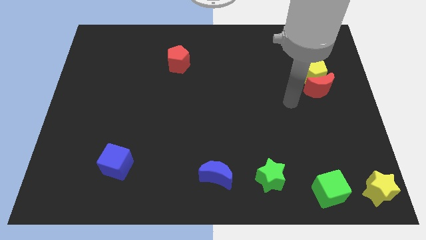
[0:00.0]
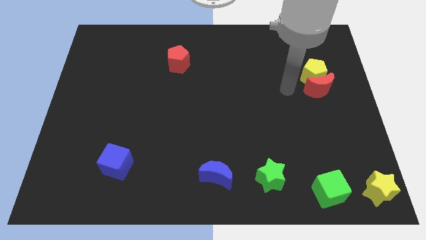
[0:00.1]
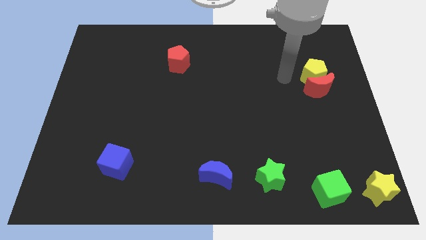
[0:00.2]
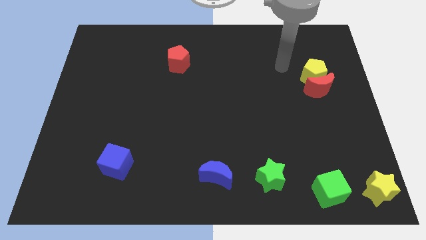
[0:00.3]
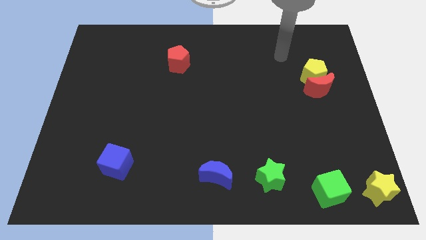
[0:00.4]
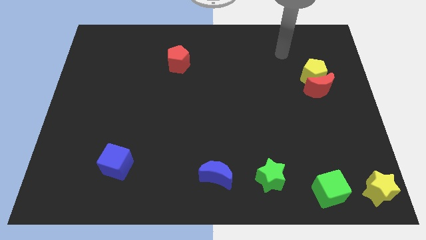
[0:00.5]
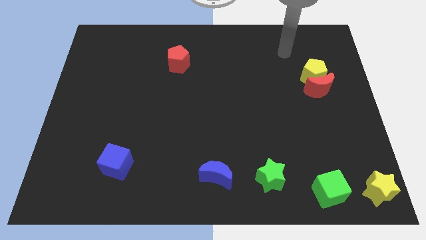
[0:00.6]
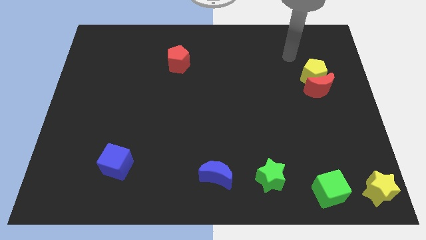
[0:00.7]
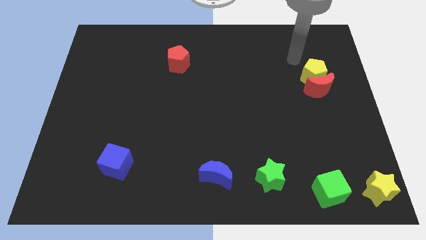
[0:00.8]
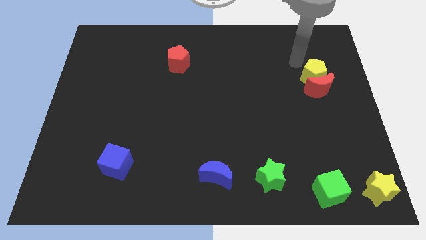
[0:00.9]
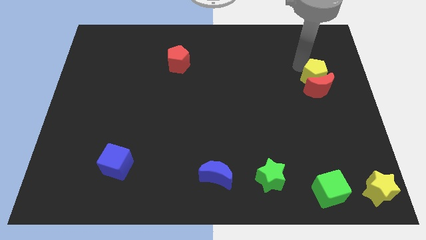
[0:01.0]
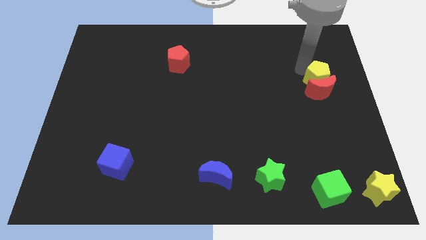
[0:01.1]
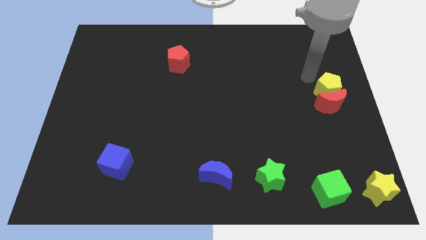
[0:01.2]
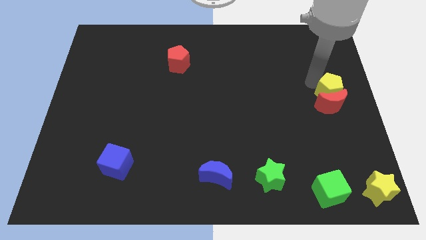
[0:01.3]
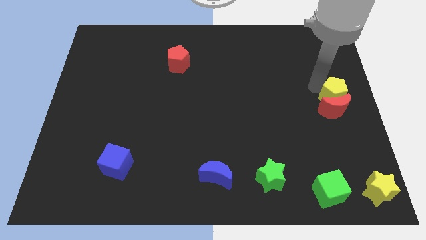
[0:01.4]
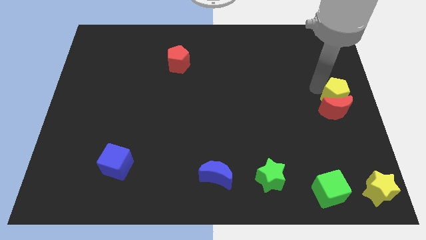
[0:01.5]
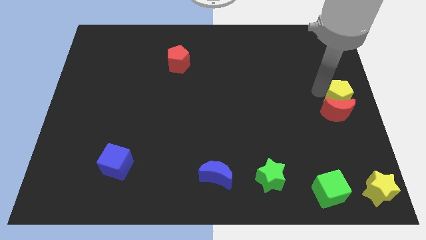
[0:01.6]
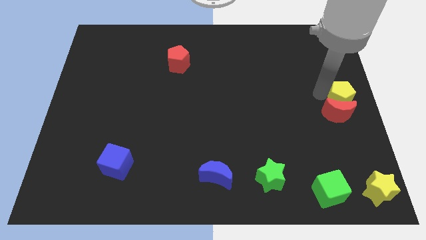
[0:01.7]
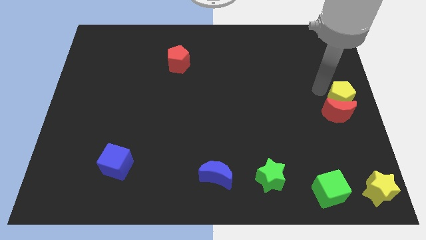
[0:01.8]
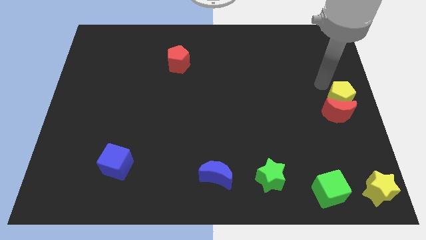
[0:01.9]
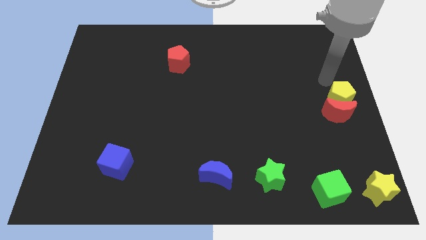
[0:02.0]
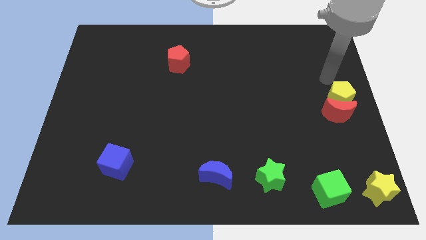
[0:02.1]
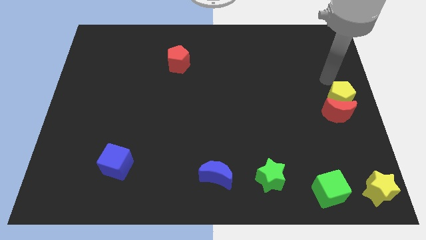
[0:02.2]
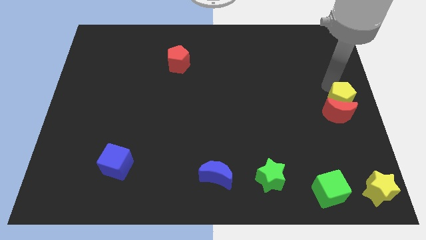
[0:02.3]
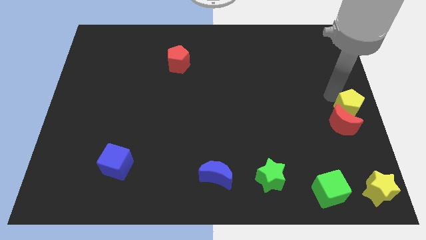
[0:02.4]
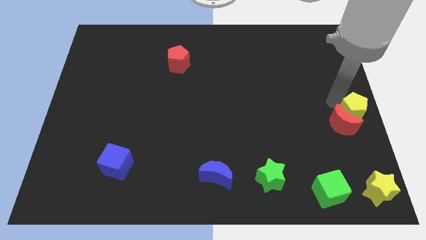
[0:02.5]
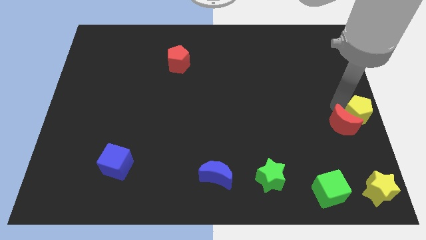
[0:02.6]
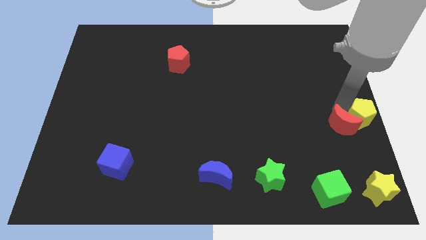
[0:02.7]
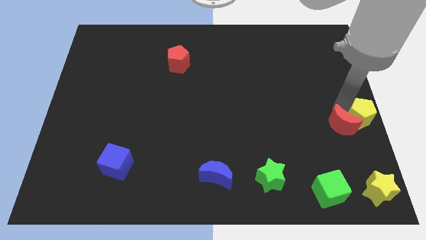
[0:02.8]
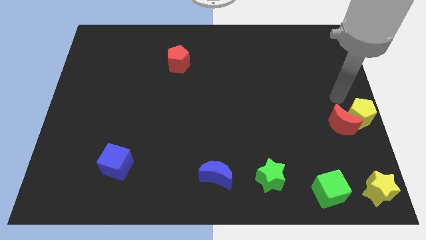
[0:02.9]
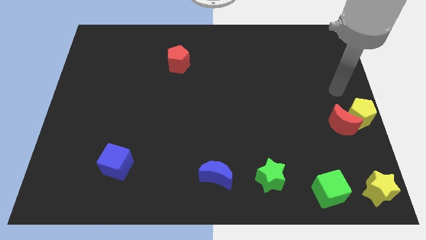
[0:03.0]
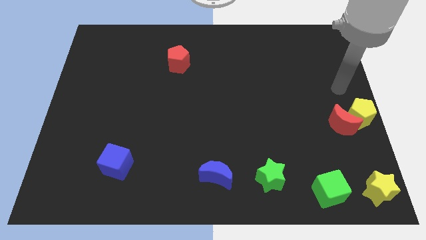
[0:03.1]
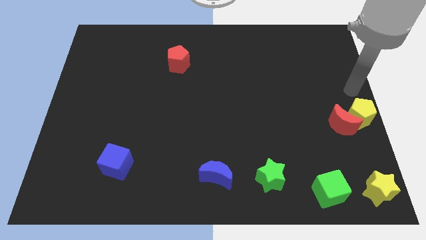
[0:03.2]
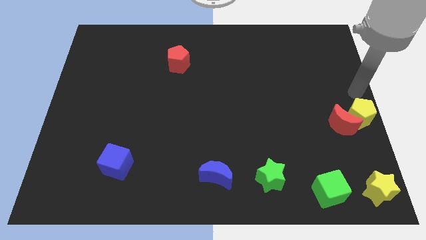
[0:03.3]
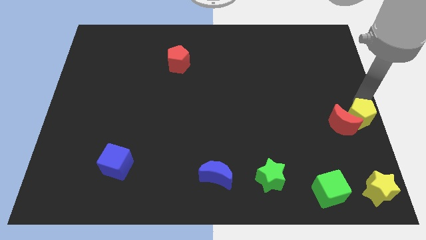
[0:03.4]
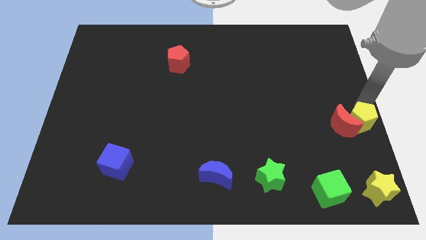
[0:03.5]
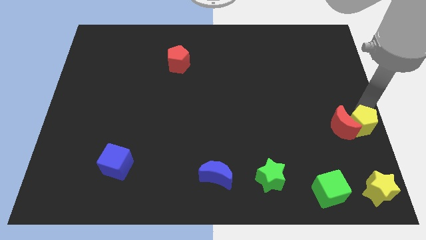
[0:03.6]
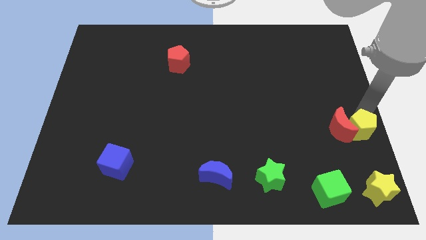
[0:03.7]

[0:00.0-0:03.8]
move the red crescent and yellow pentagon towards the top side of the yellow star

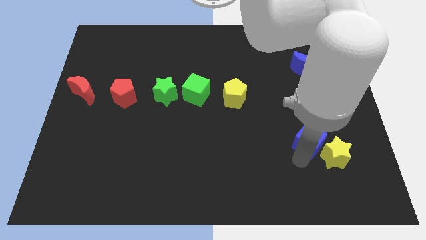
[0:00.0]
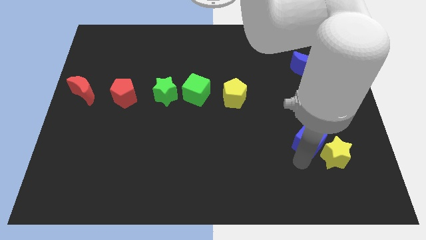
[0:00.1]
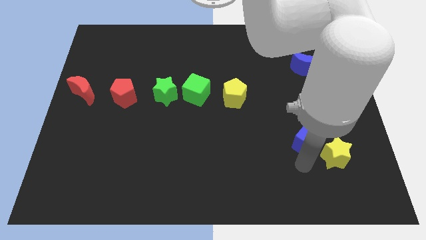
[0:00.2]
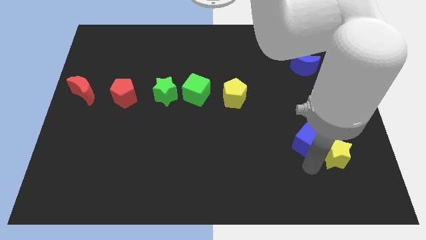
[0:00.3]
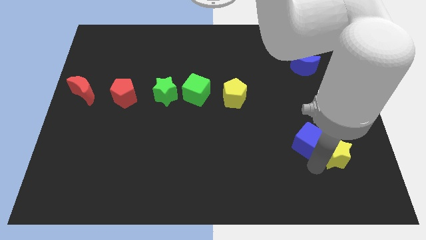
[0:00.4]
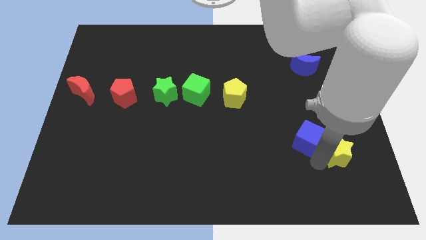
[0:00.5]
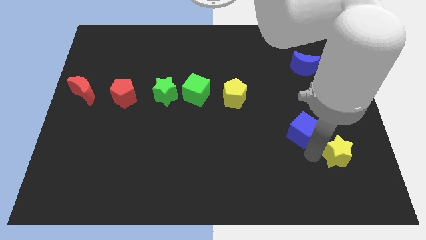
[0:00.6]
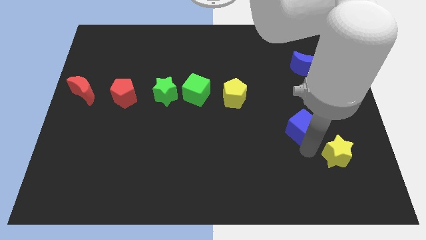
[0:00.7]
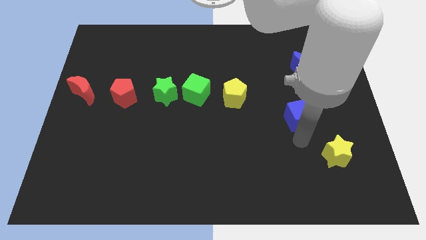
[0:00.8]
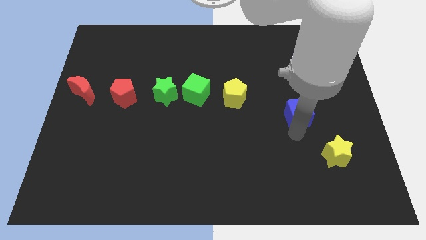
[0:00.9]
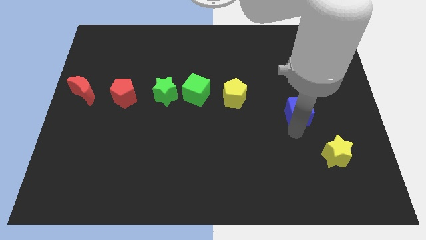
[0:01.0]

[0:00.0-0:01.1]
push the blue cube towards up

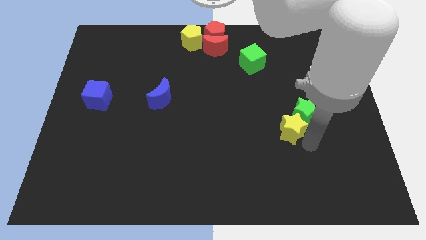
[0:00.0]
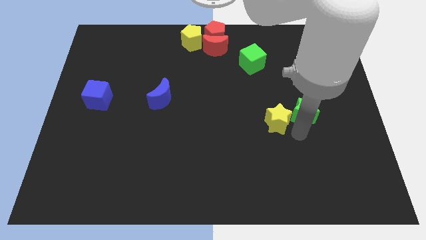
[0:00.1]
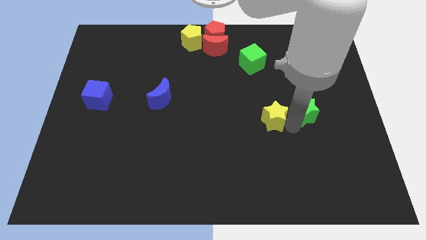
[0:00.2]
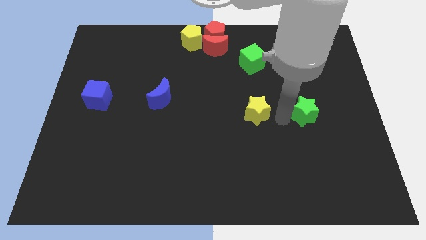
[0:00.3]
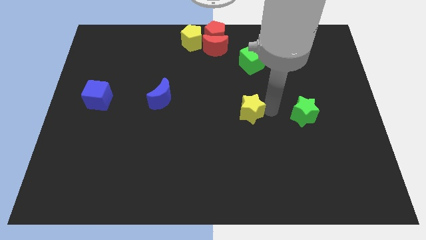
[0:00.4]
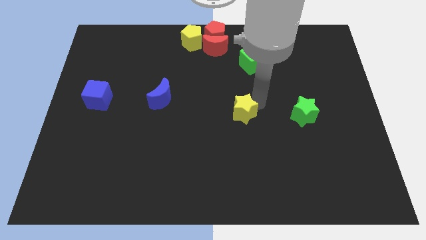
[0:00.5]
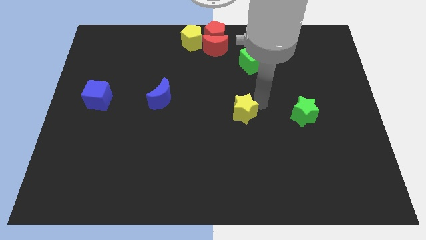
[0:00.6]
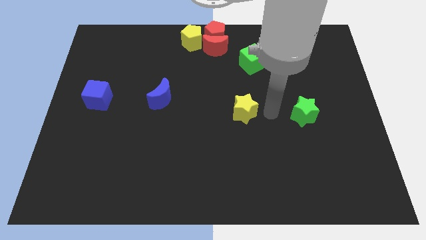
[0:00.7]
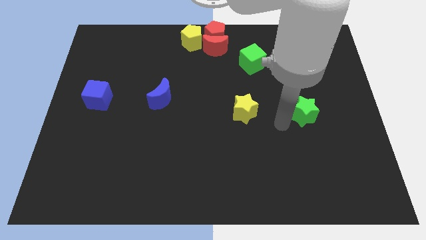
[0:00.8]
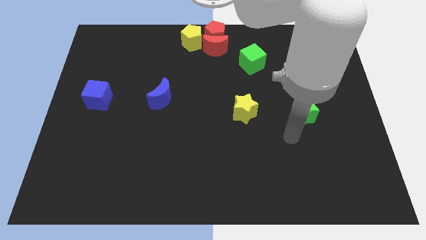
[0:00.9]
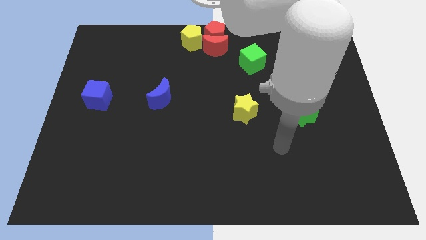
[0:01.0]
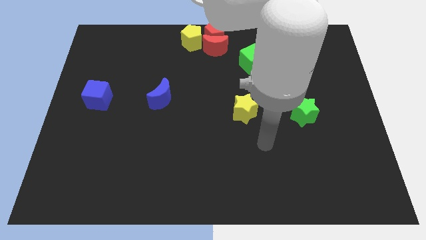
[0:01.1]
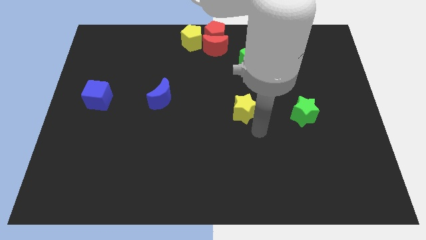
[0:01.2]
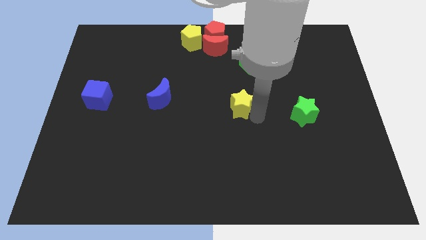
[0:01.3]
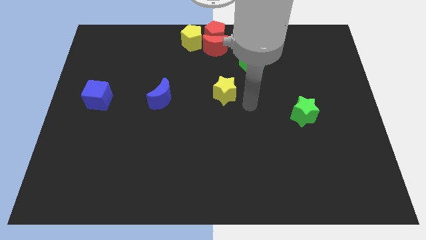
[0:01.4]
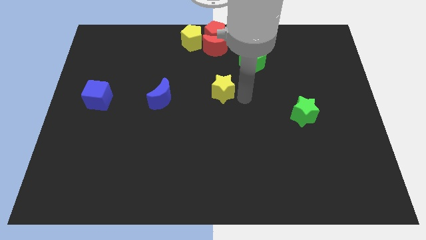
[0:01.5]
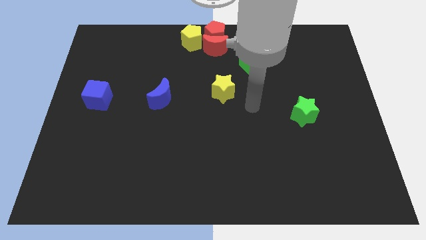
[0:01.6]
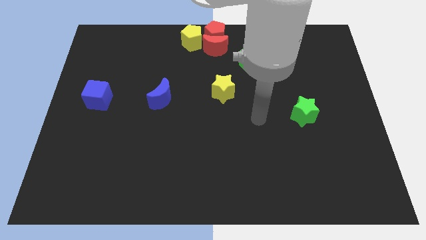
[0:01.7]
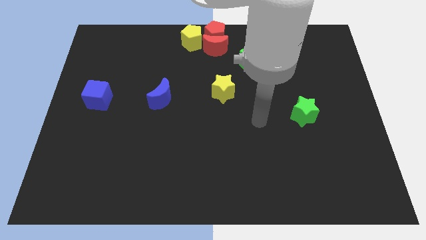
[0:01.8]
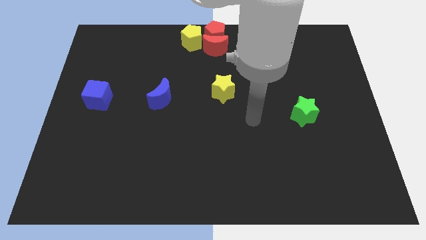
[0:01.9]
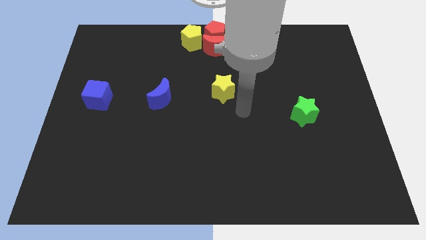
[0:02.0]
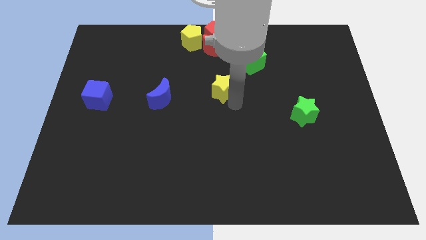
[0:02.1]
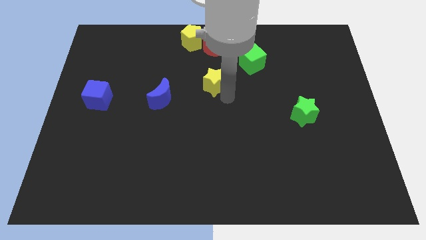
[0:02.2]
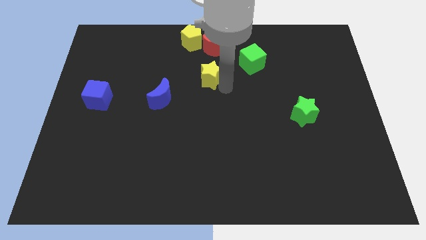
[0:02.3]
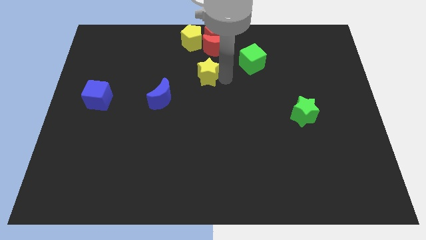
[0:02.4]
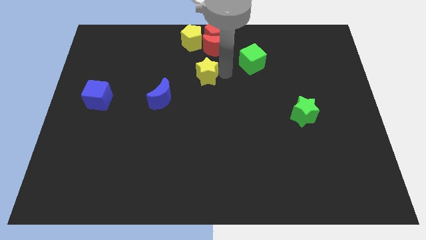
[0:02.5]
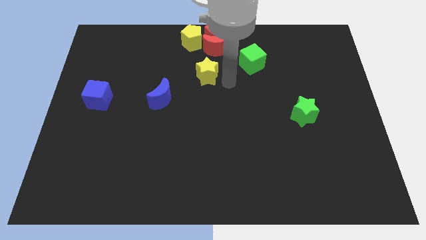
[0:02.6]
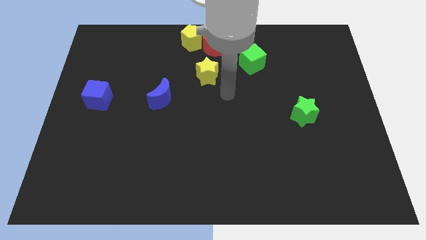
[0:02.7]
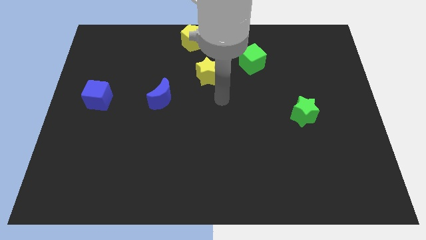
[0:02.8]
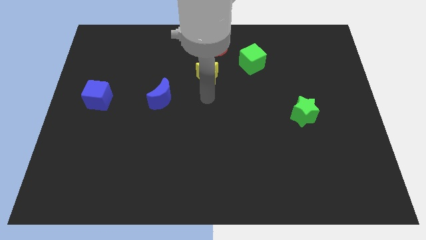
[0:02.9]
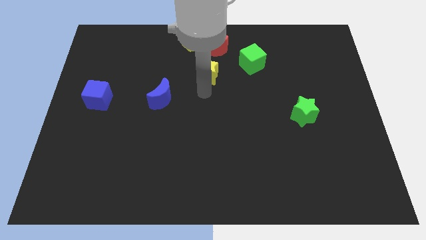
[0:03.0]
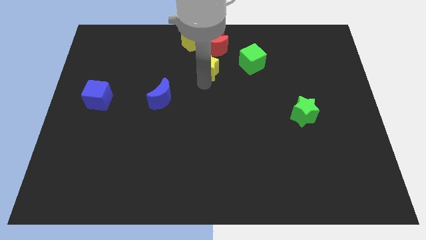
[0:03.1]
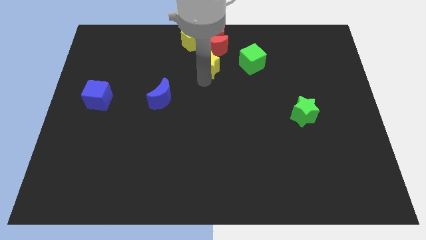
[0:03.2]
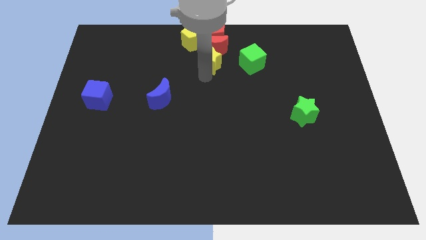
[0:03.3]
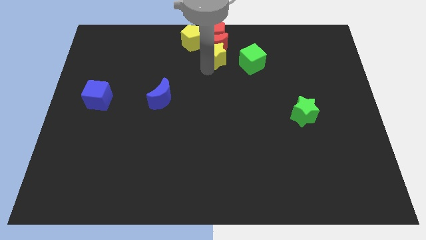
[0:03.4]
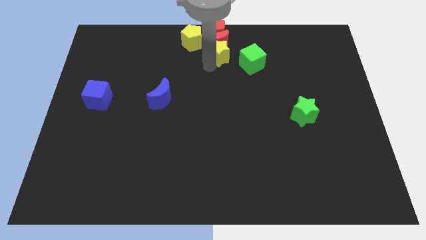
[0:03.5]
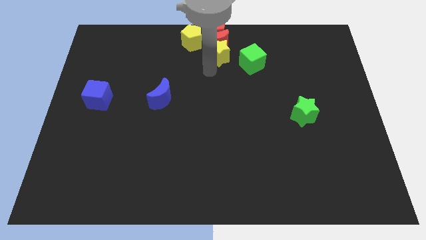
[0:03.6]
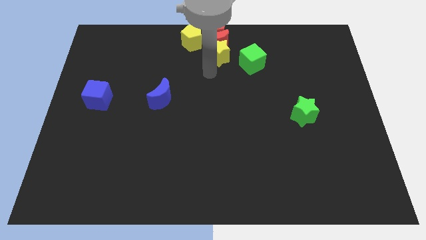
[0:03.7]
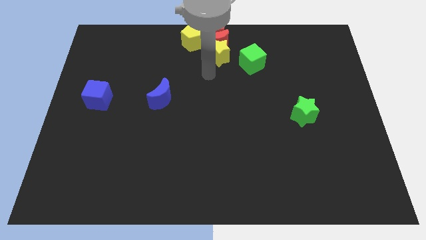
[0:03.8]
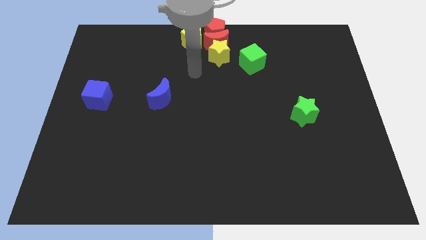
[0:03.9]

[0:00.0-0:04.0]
place yellow stat to the bottom of the red moon
